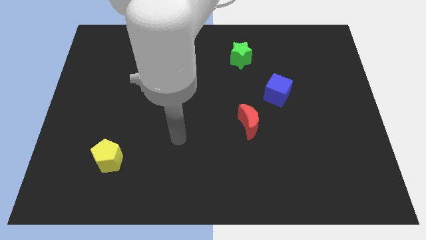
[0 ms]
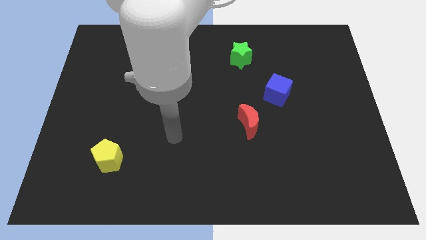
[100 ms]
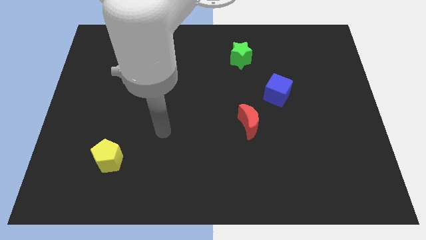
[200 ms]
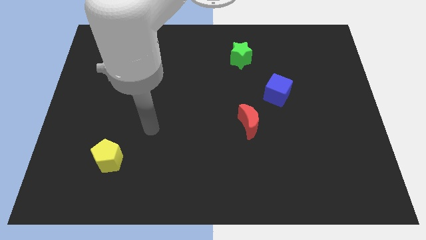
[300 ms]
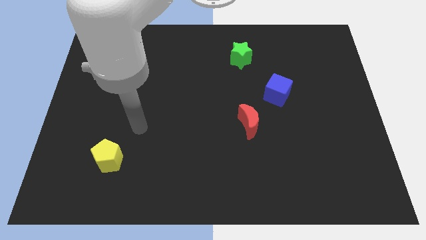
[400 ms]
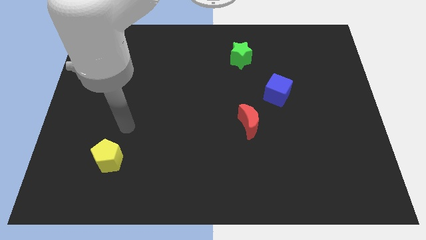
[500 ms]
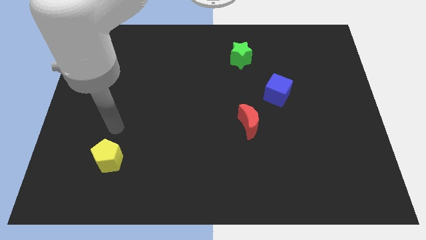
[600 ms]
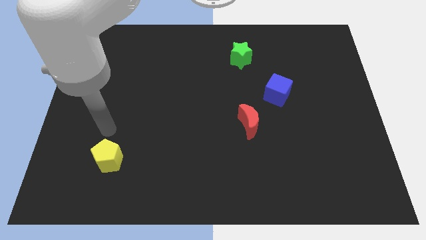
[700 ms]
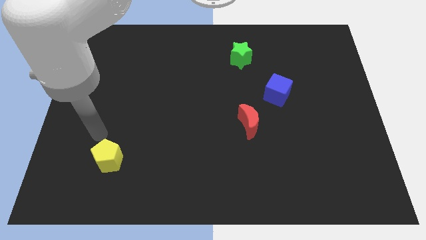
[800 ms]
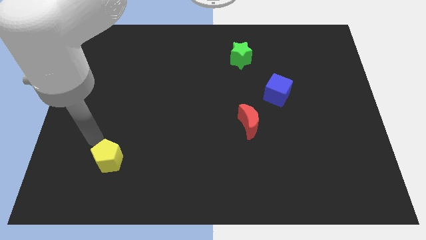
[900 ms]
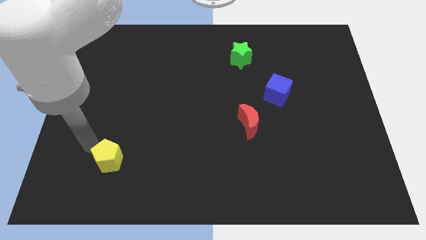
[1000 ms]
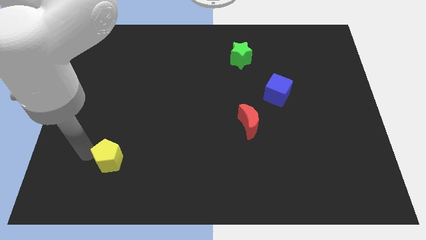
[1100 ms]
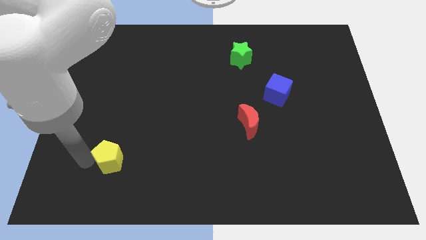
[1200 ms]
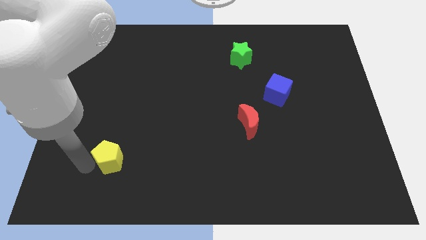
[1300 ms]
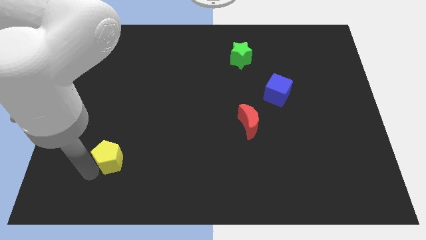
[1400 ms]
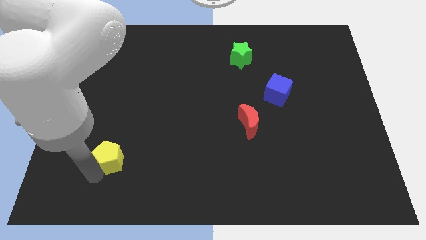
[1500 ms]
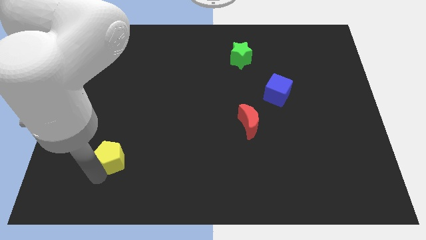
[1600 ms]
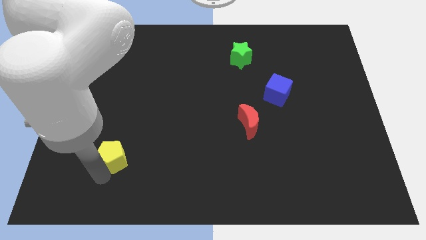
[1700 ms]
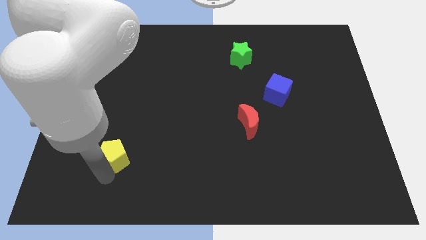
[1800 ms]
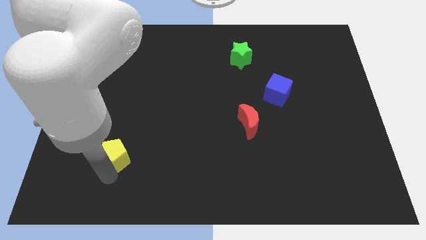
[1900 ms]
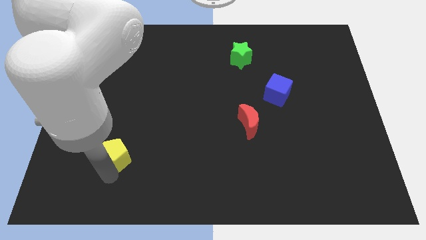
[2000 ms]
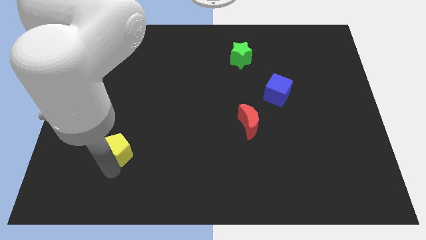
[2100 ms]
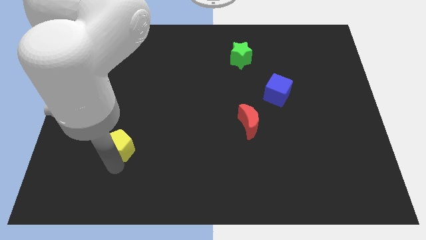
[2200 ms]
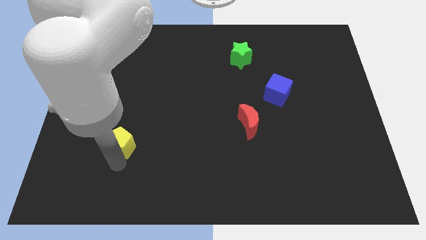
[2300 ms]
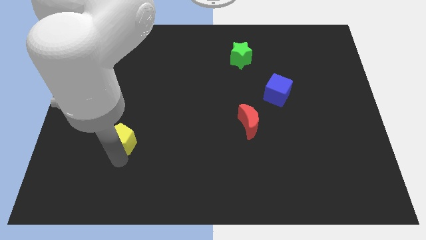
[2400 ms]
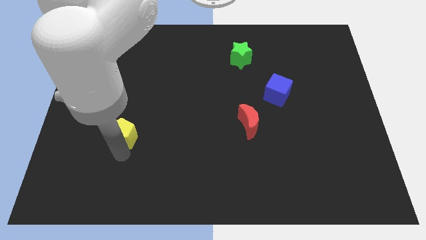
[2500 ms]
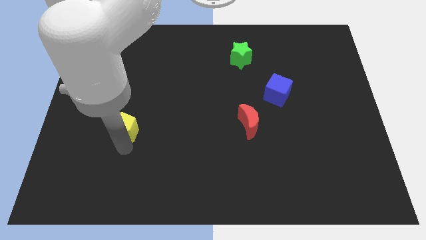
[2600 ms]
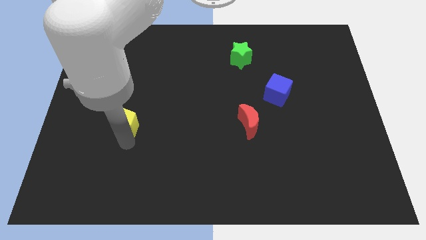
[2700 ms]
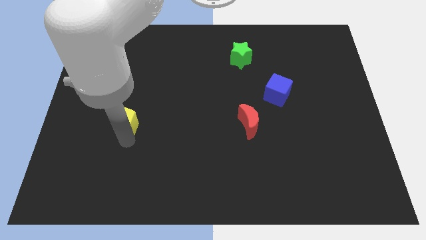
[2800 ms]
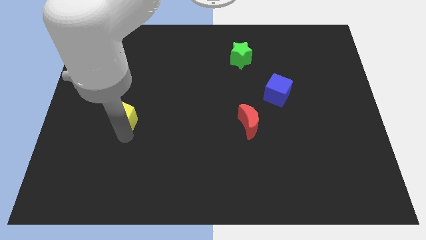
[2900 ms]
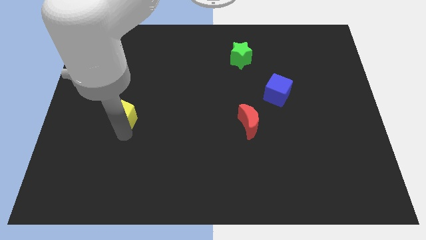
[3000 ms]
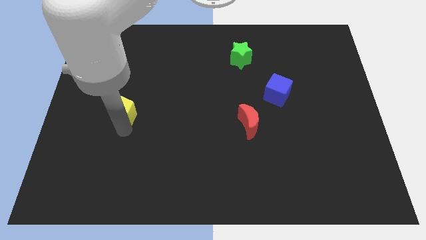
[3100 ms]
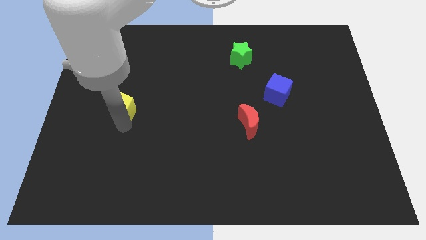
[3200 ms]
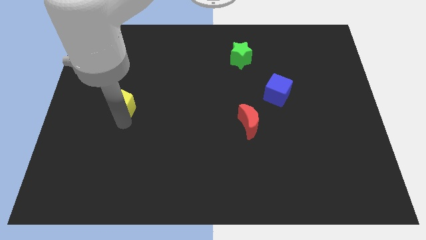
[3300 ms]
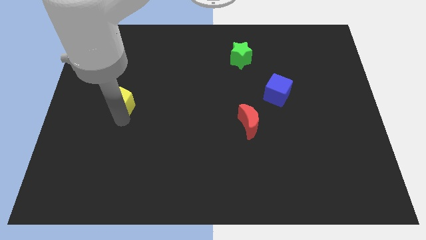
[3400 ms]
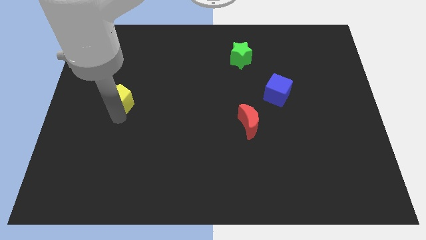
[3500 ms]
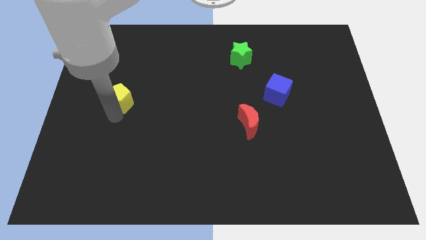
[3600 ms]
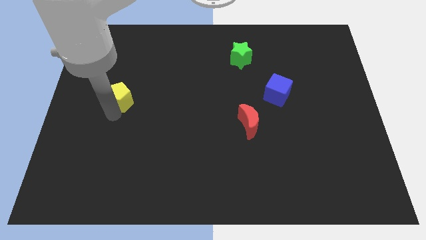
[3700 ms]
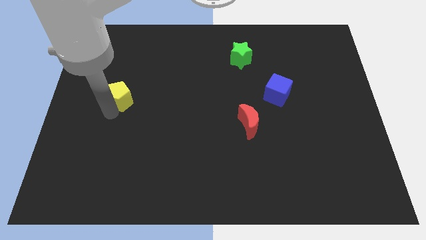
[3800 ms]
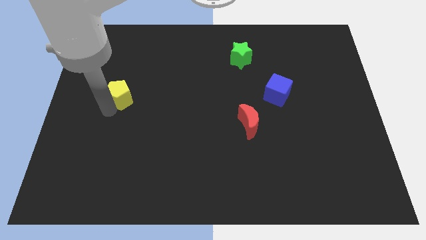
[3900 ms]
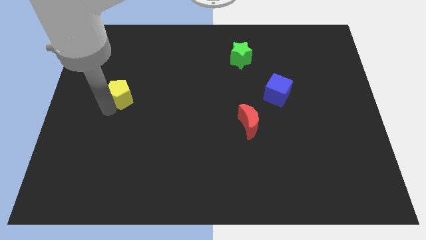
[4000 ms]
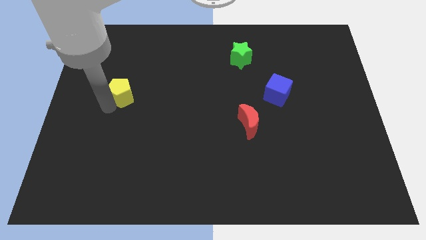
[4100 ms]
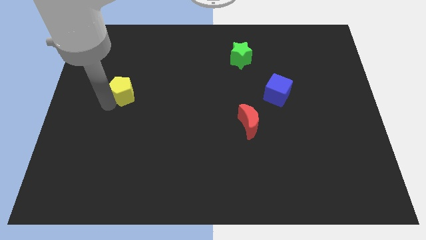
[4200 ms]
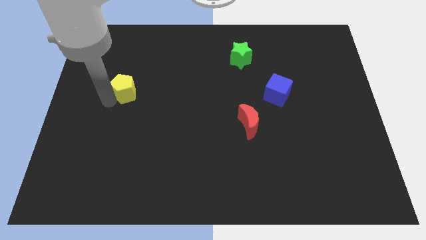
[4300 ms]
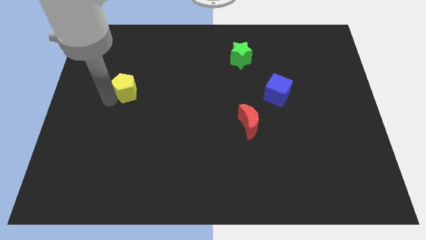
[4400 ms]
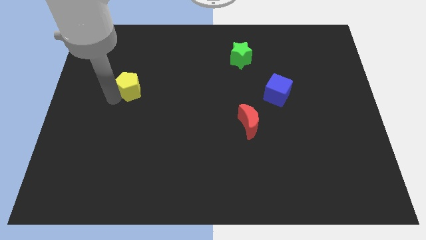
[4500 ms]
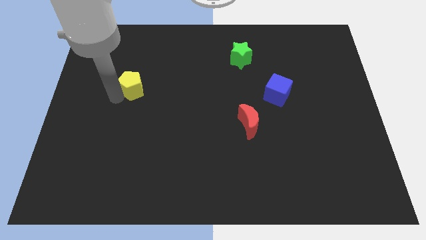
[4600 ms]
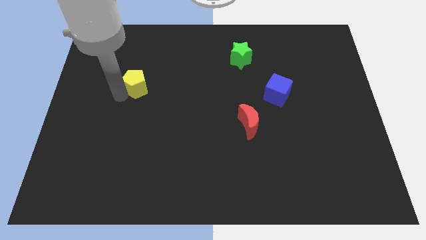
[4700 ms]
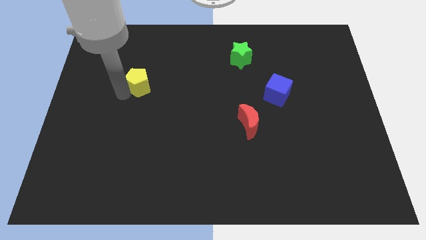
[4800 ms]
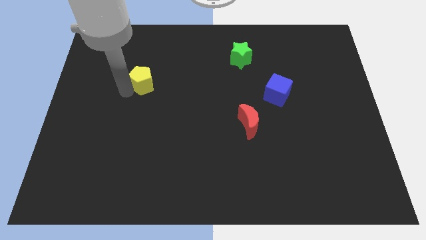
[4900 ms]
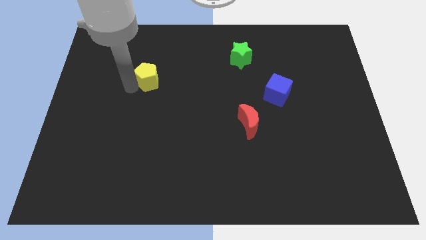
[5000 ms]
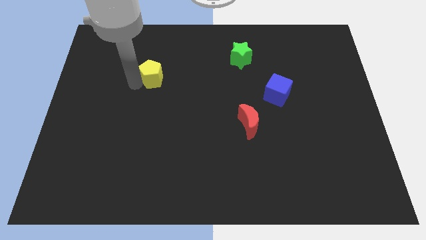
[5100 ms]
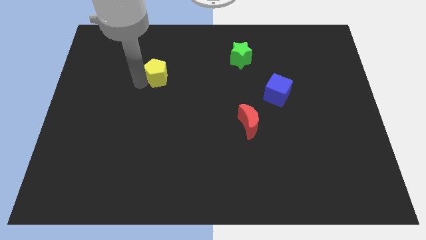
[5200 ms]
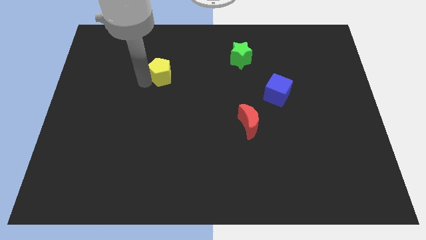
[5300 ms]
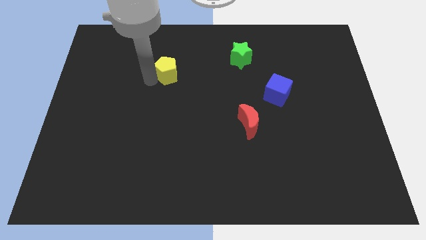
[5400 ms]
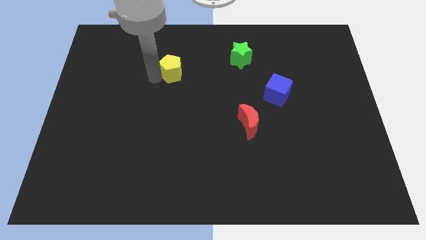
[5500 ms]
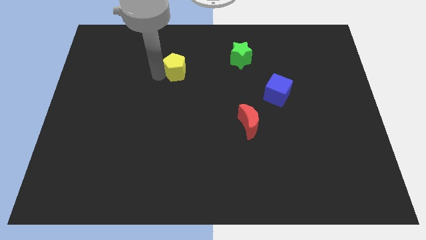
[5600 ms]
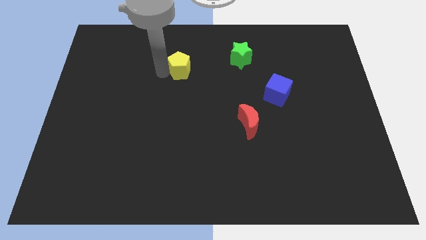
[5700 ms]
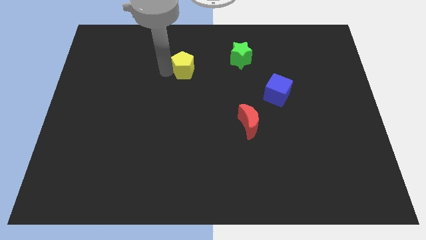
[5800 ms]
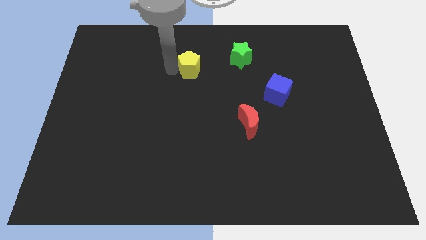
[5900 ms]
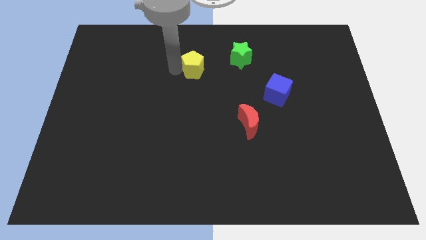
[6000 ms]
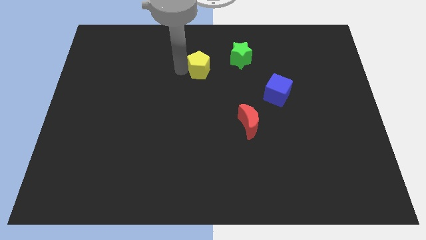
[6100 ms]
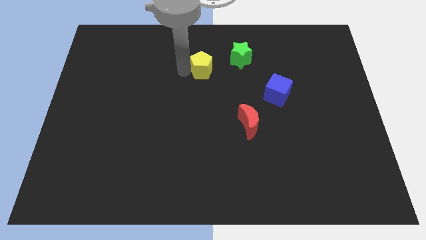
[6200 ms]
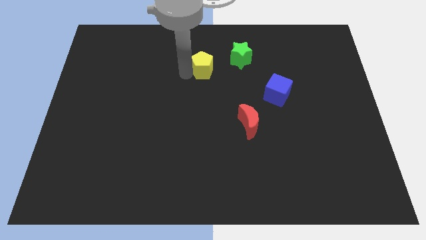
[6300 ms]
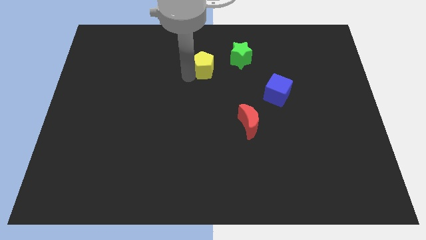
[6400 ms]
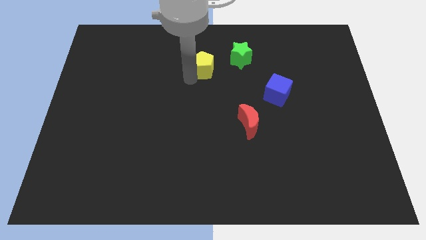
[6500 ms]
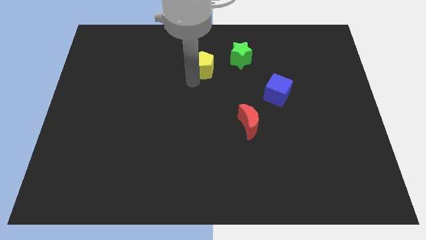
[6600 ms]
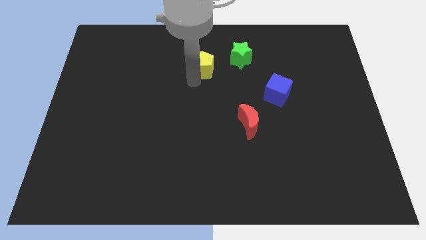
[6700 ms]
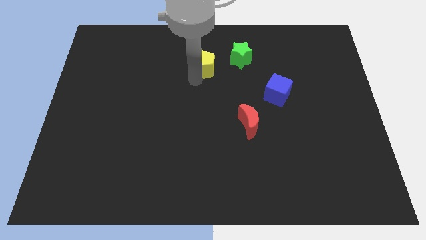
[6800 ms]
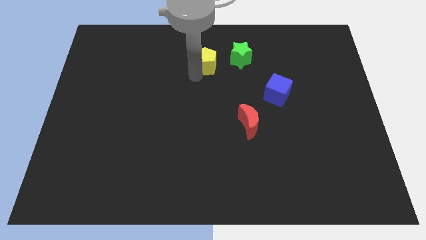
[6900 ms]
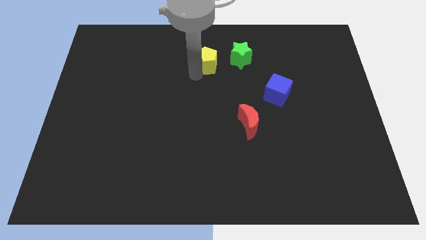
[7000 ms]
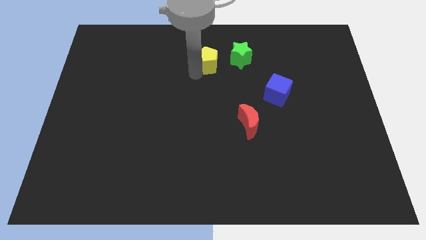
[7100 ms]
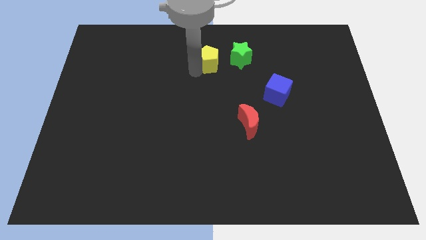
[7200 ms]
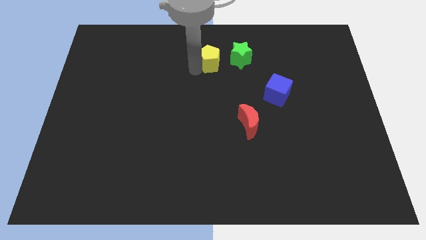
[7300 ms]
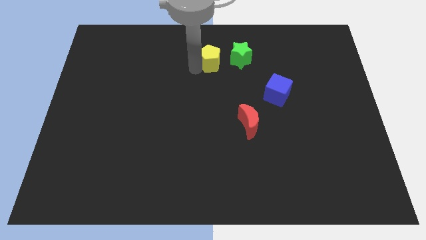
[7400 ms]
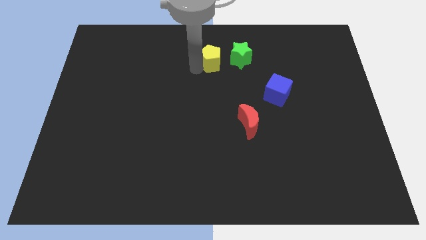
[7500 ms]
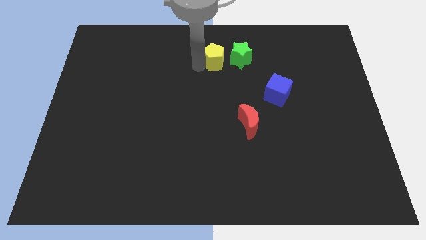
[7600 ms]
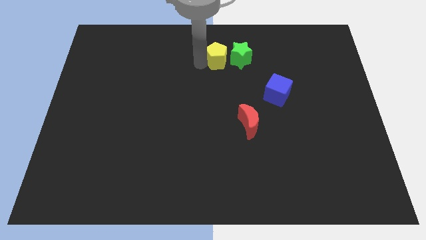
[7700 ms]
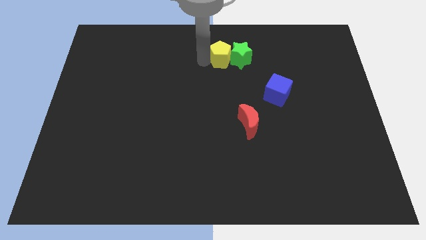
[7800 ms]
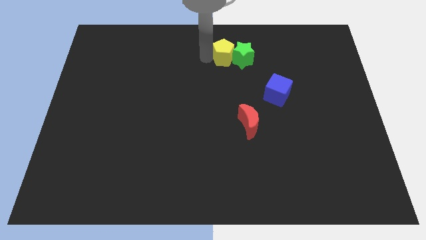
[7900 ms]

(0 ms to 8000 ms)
push the pentagon next to the star

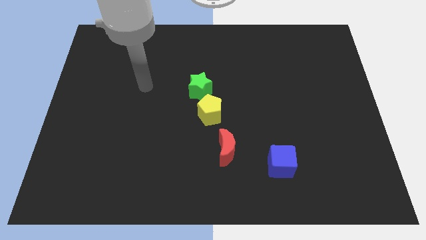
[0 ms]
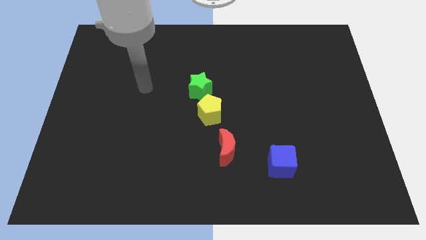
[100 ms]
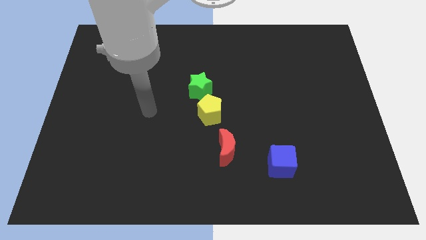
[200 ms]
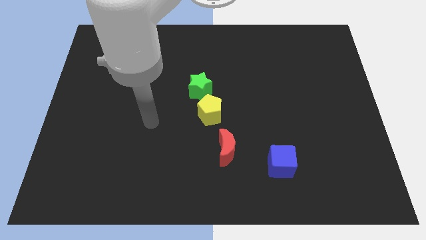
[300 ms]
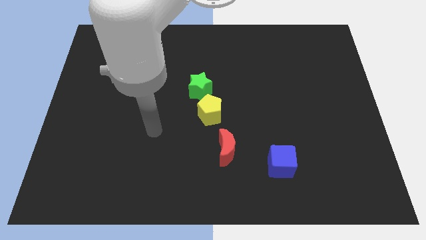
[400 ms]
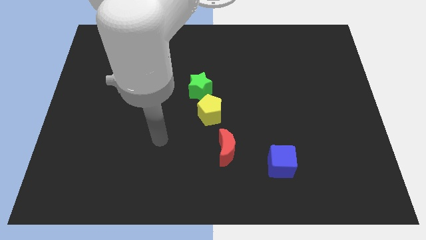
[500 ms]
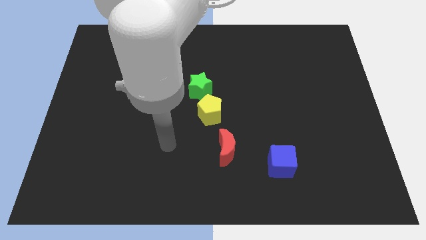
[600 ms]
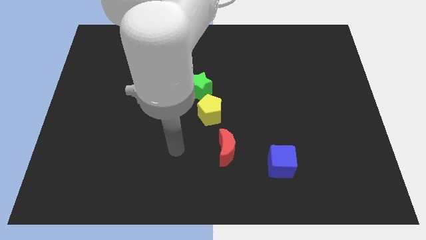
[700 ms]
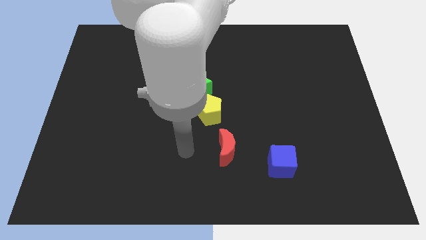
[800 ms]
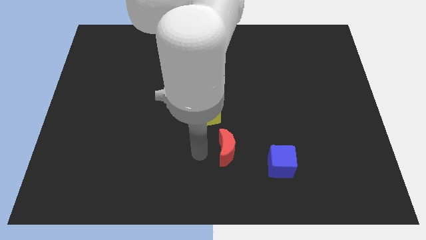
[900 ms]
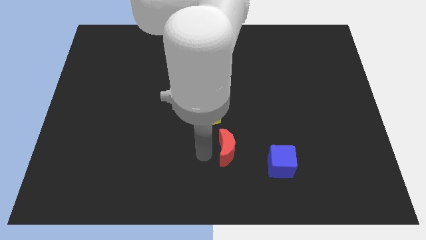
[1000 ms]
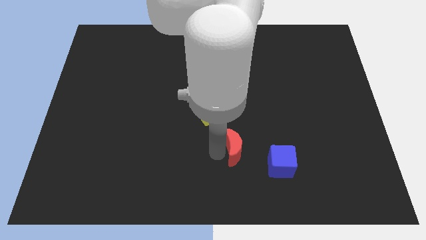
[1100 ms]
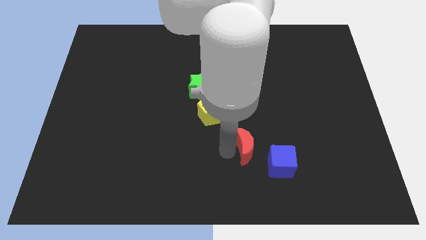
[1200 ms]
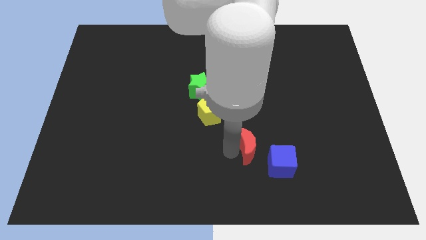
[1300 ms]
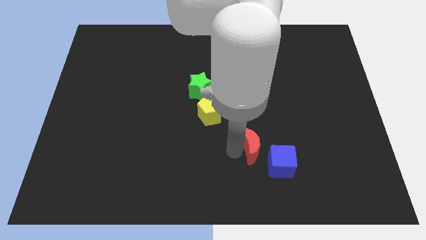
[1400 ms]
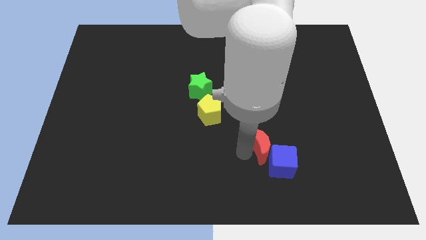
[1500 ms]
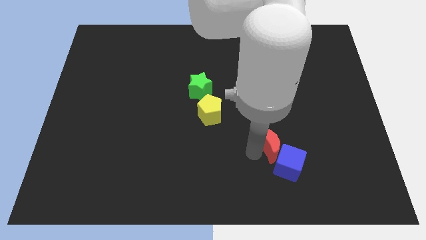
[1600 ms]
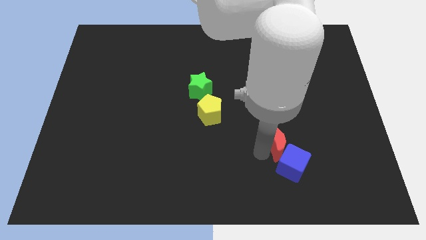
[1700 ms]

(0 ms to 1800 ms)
slide the red block close to the cube
